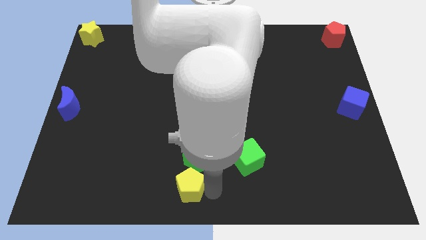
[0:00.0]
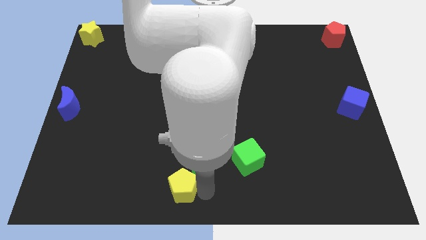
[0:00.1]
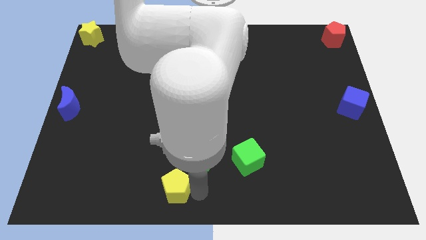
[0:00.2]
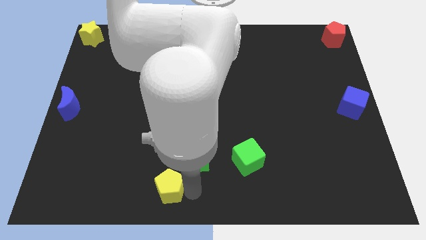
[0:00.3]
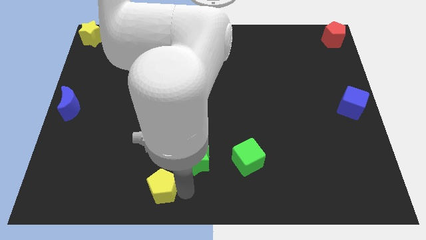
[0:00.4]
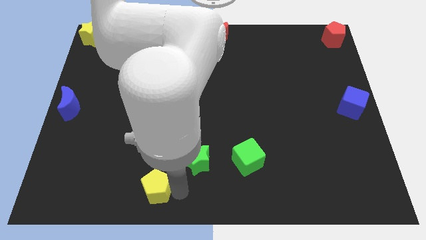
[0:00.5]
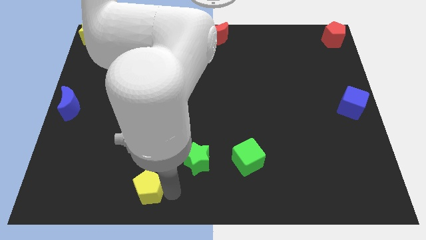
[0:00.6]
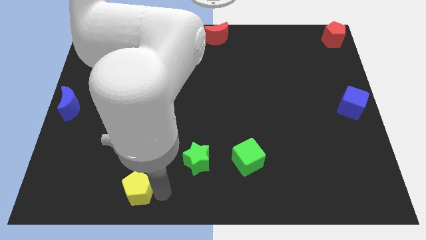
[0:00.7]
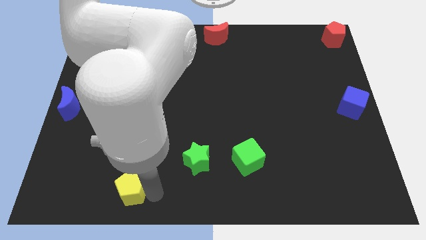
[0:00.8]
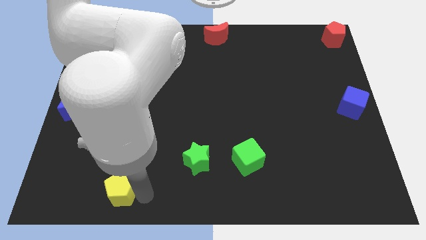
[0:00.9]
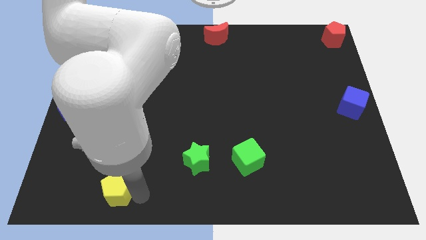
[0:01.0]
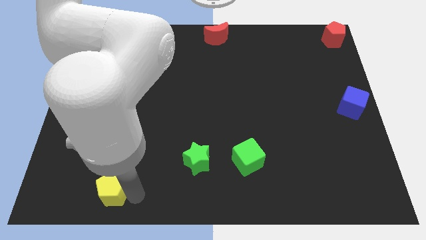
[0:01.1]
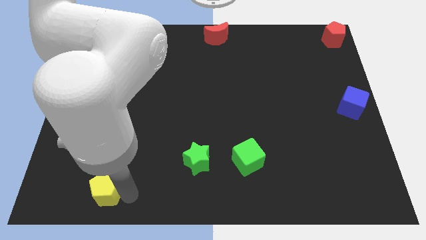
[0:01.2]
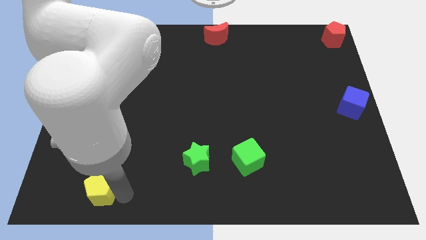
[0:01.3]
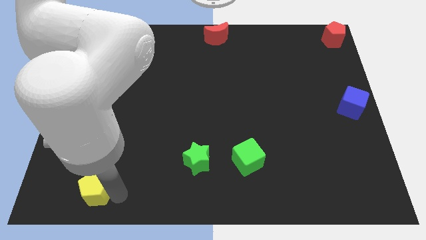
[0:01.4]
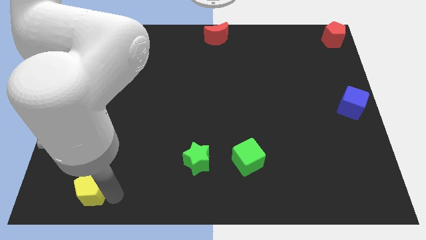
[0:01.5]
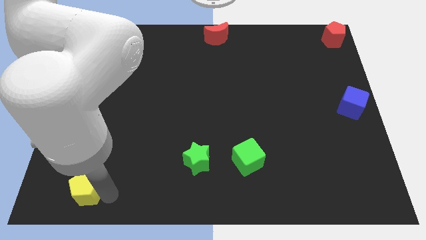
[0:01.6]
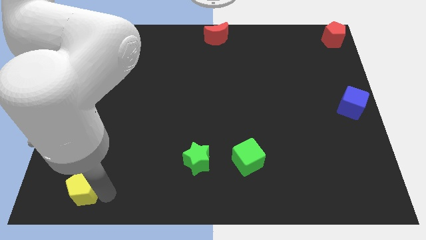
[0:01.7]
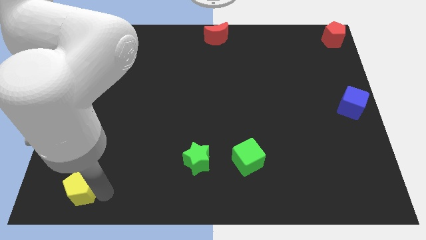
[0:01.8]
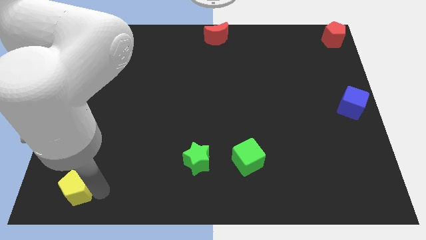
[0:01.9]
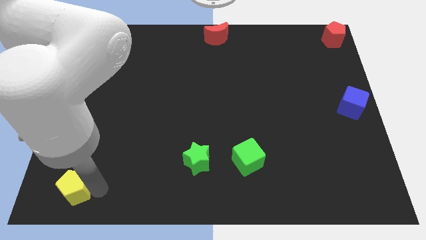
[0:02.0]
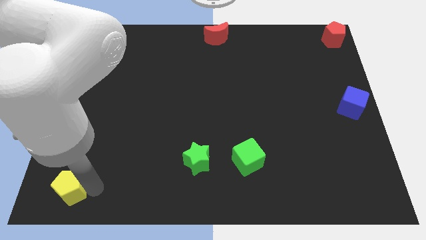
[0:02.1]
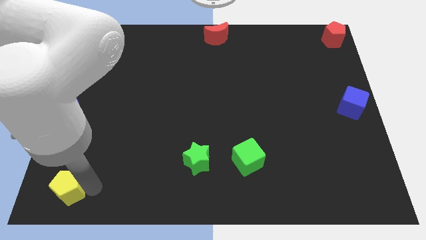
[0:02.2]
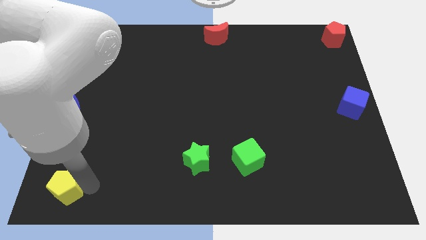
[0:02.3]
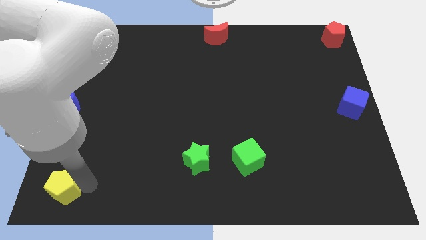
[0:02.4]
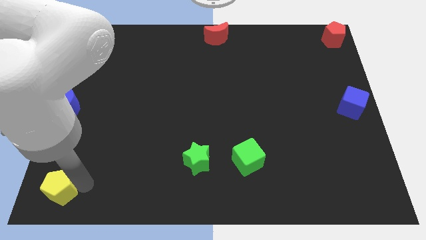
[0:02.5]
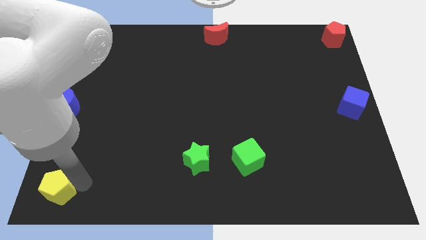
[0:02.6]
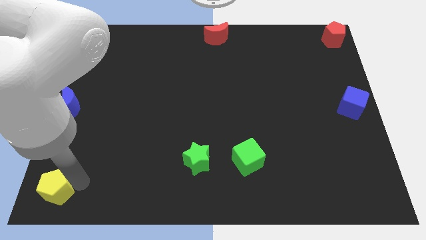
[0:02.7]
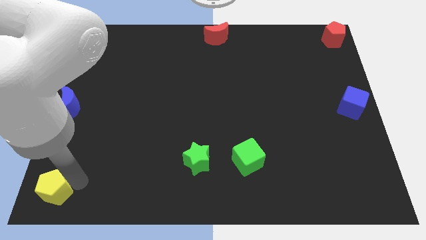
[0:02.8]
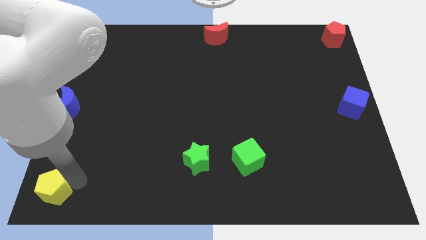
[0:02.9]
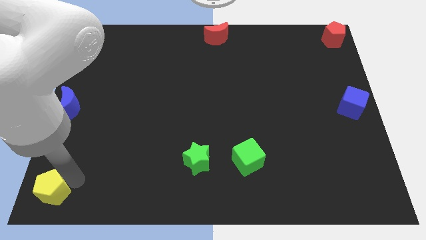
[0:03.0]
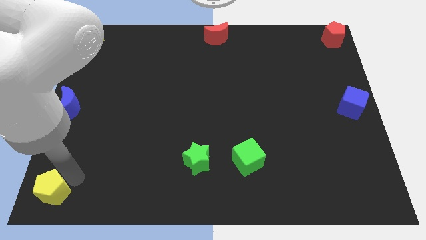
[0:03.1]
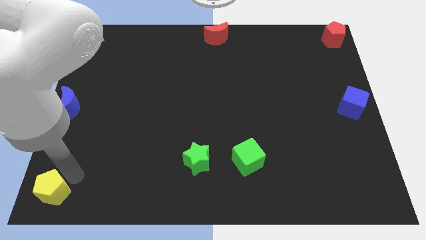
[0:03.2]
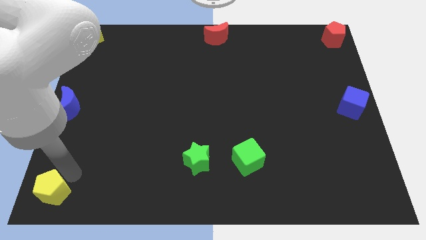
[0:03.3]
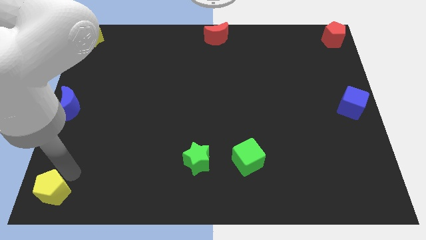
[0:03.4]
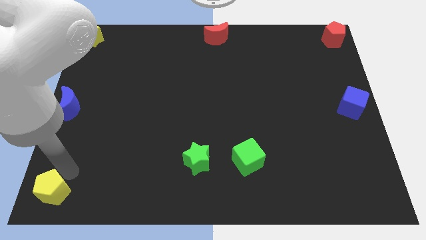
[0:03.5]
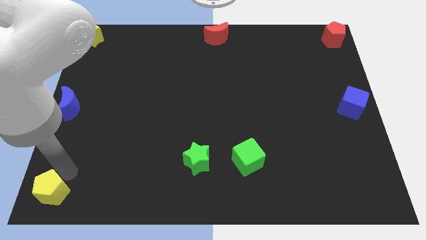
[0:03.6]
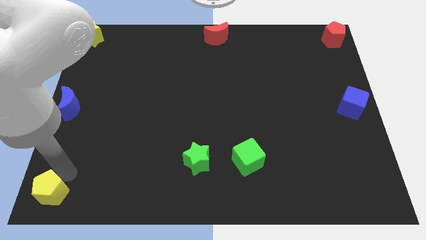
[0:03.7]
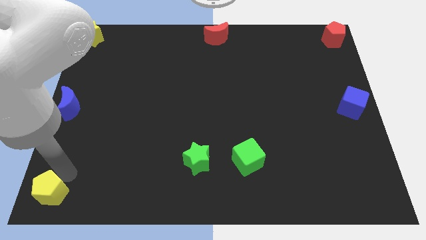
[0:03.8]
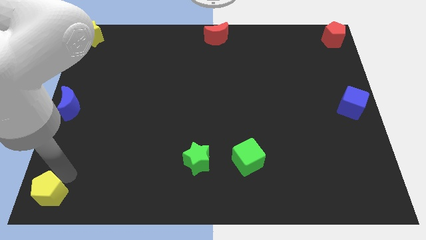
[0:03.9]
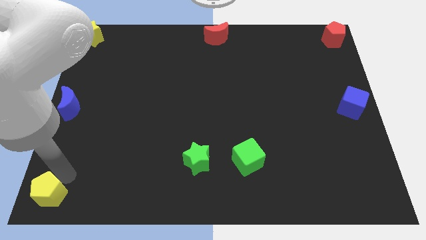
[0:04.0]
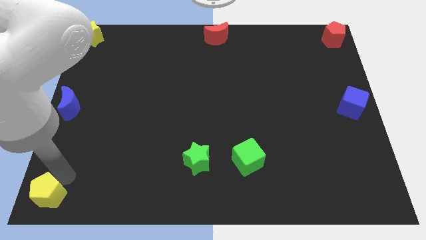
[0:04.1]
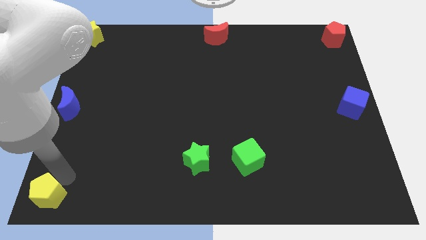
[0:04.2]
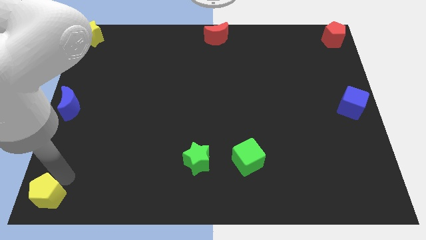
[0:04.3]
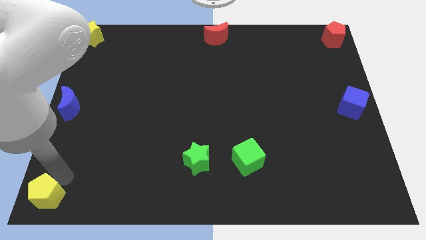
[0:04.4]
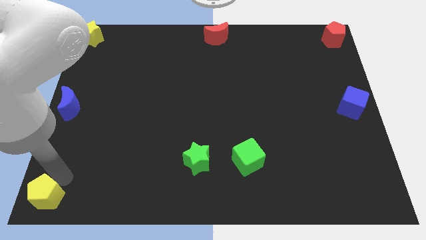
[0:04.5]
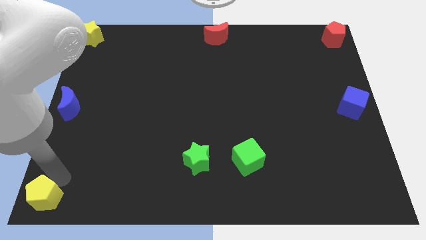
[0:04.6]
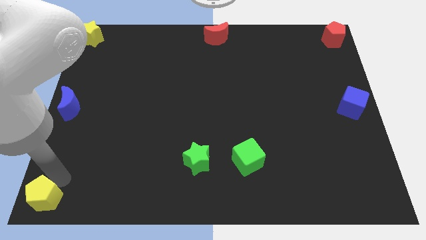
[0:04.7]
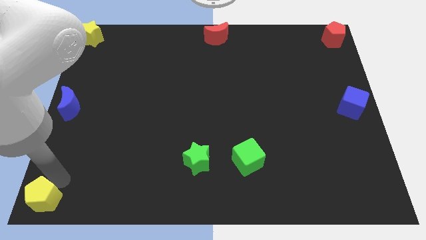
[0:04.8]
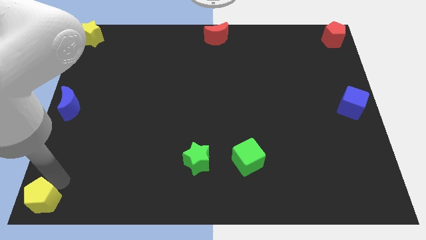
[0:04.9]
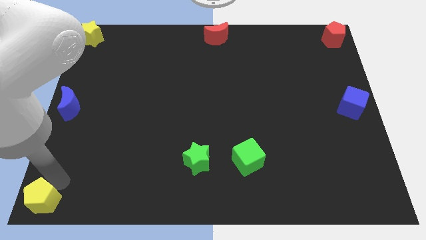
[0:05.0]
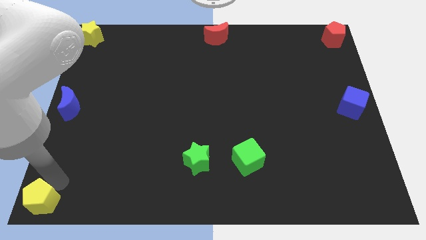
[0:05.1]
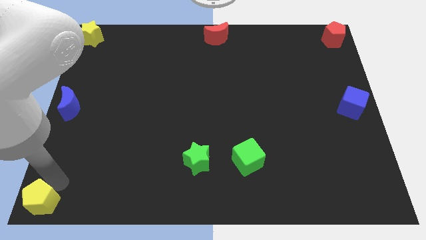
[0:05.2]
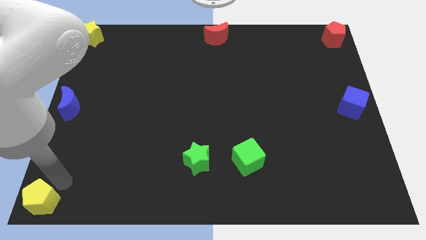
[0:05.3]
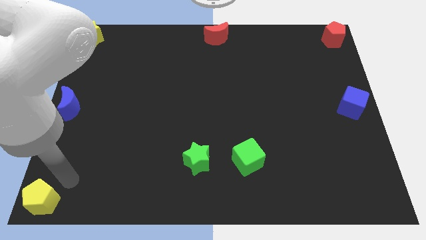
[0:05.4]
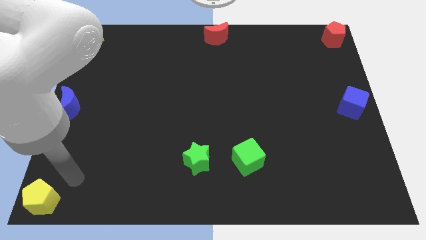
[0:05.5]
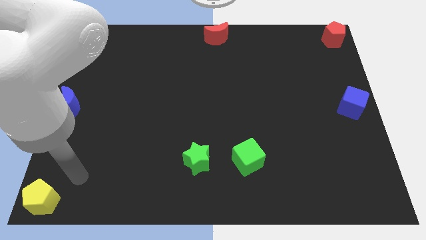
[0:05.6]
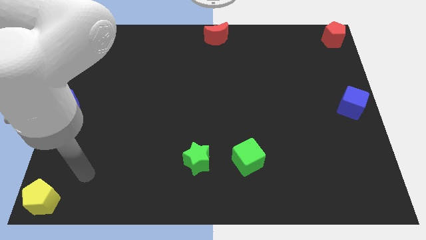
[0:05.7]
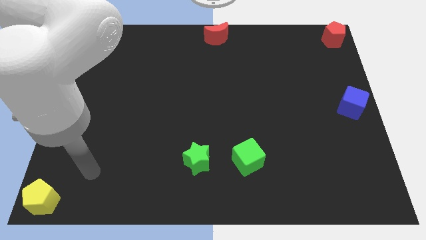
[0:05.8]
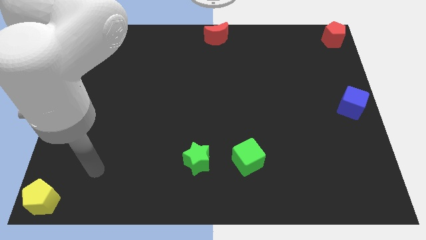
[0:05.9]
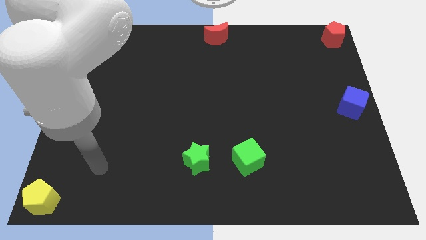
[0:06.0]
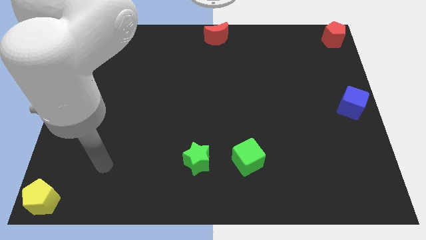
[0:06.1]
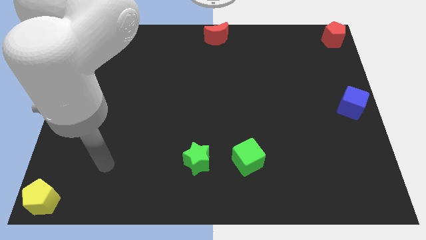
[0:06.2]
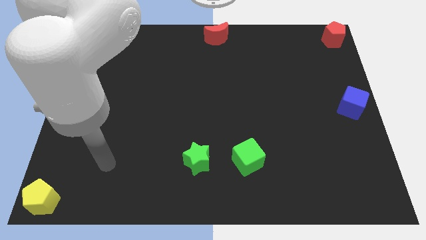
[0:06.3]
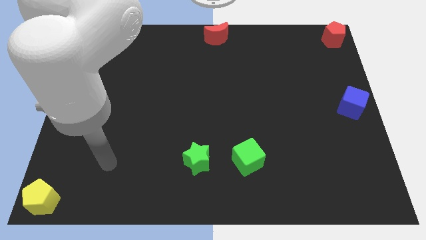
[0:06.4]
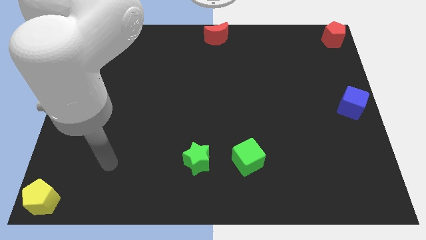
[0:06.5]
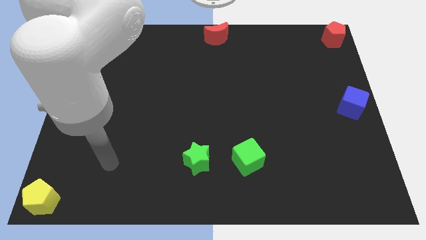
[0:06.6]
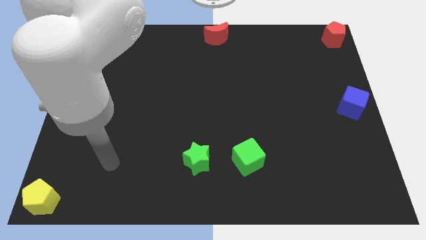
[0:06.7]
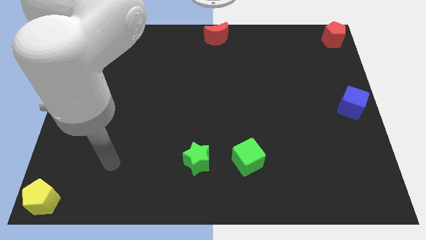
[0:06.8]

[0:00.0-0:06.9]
move the yellow pentagon left bottom of the board

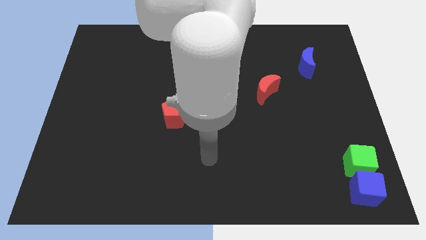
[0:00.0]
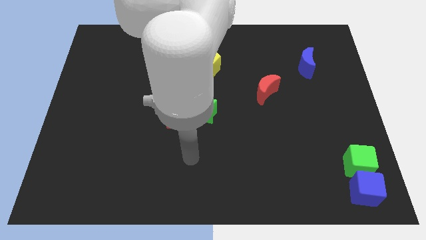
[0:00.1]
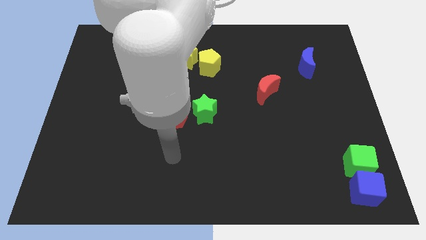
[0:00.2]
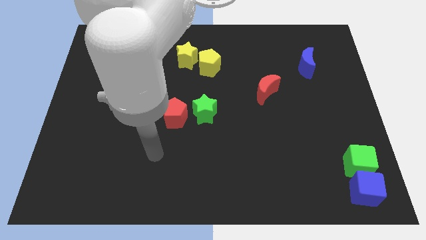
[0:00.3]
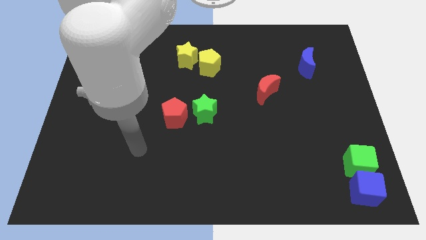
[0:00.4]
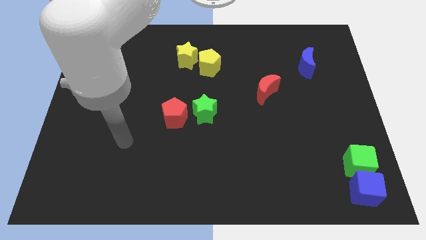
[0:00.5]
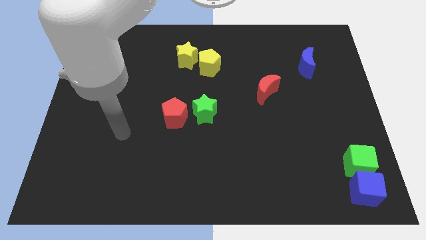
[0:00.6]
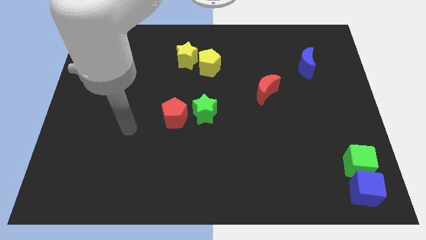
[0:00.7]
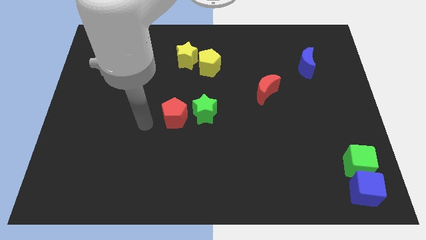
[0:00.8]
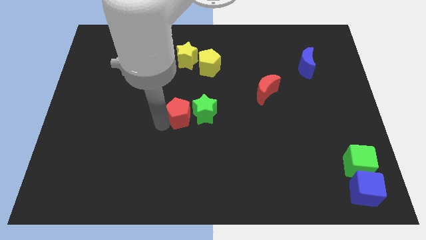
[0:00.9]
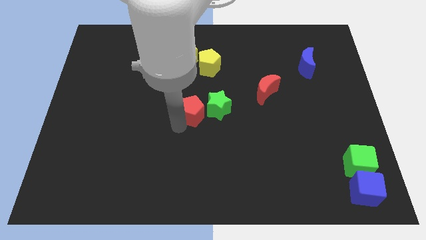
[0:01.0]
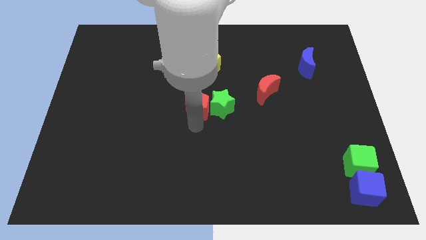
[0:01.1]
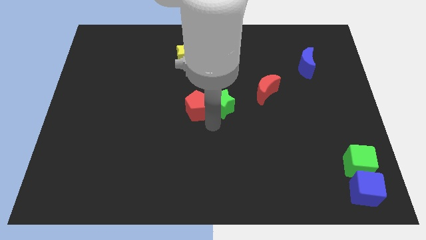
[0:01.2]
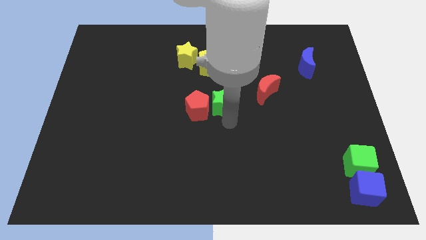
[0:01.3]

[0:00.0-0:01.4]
push the red pentagon into the green star

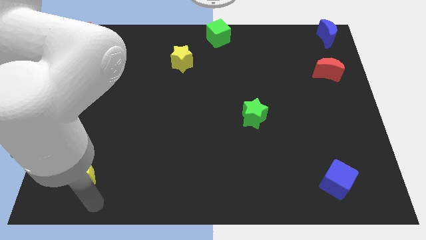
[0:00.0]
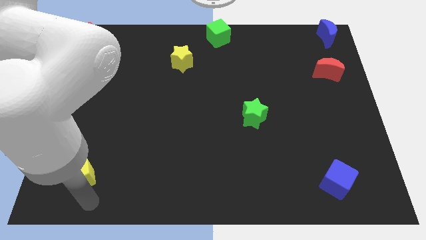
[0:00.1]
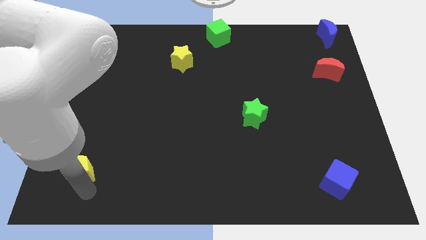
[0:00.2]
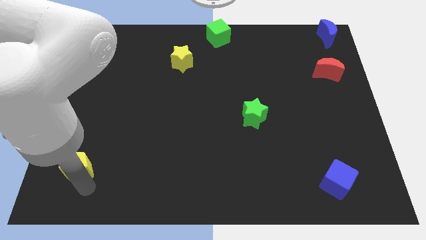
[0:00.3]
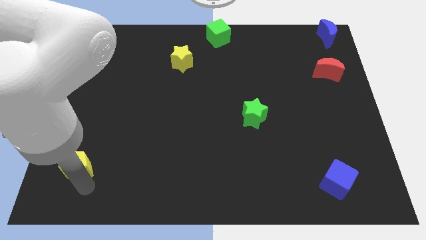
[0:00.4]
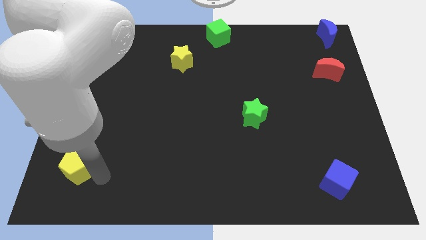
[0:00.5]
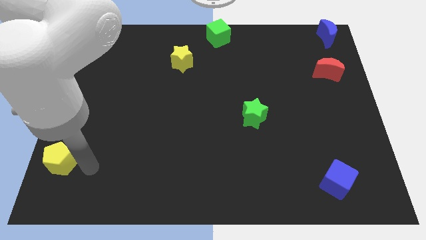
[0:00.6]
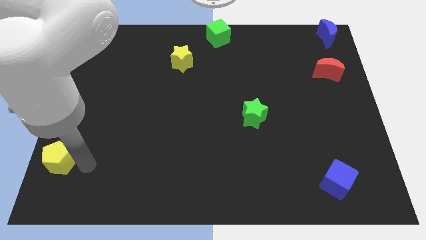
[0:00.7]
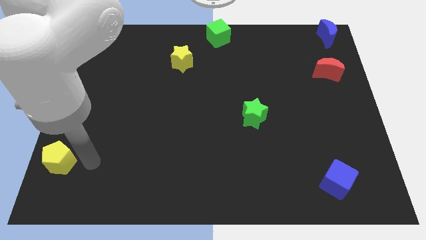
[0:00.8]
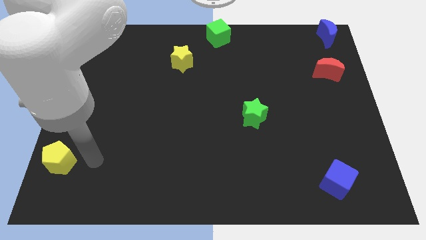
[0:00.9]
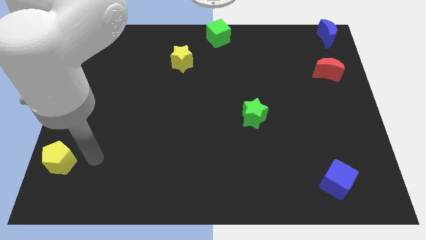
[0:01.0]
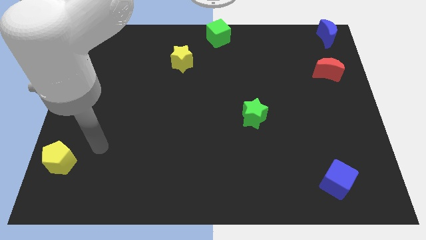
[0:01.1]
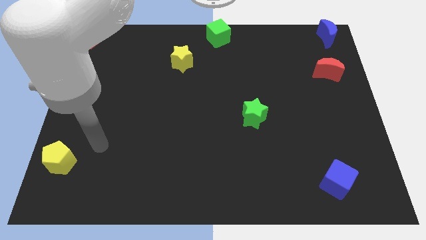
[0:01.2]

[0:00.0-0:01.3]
slide yellow pentagon diagonal to the yellow star
